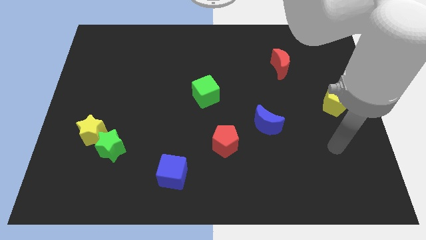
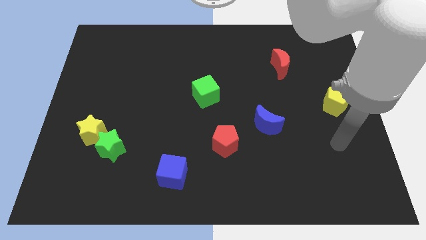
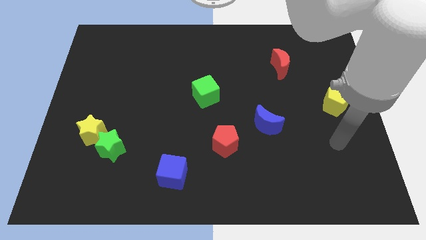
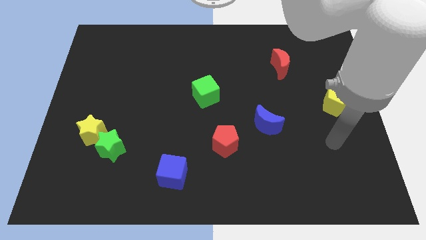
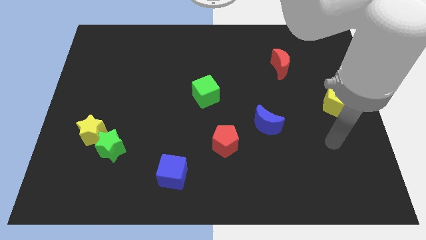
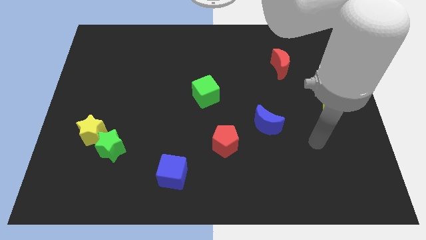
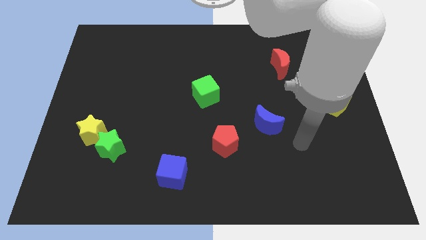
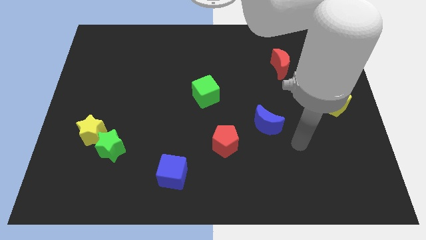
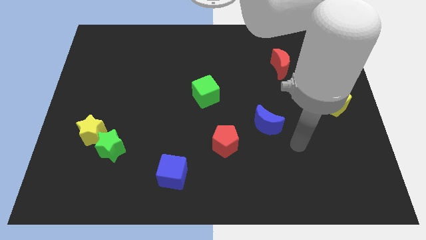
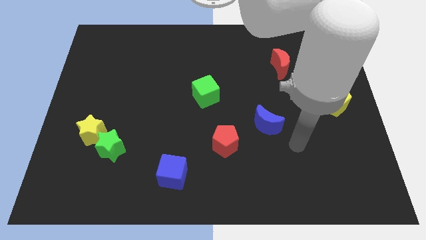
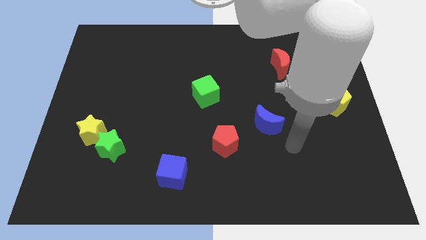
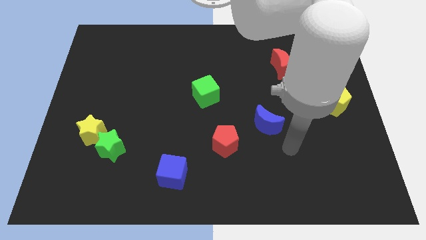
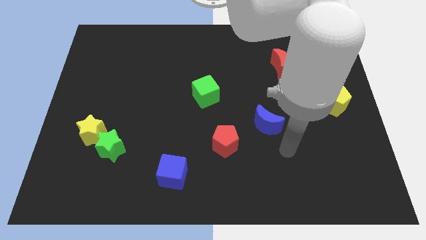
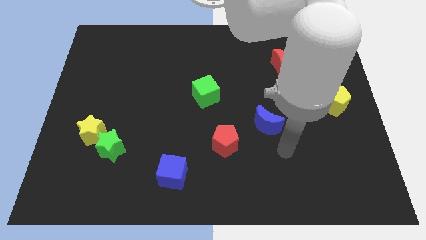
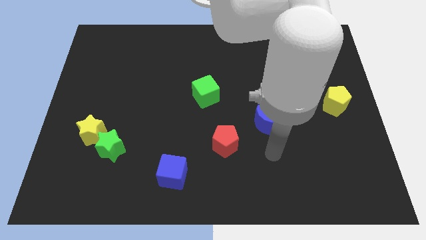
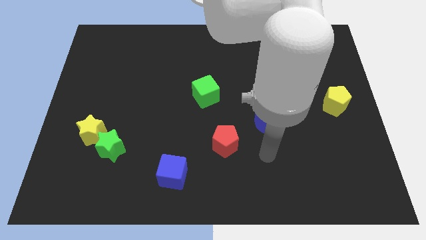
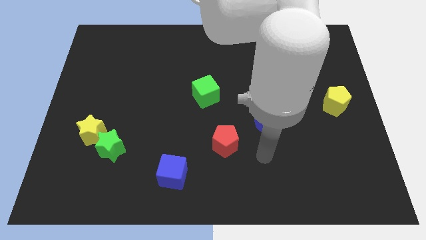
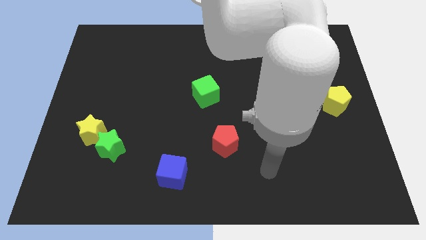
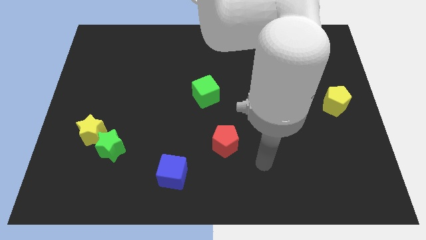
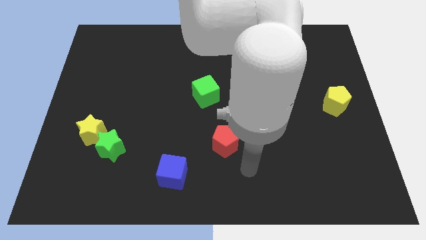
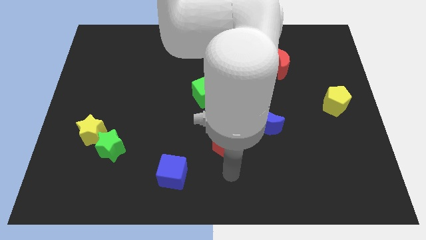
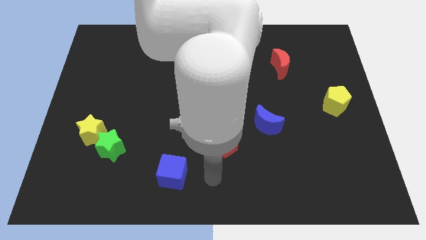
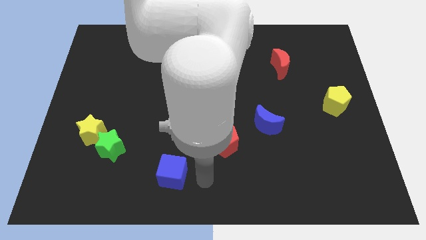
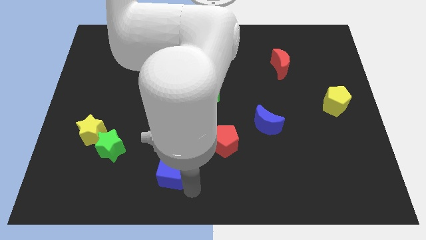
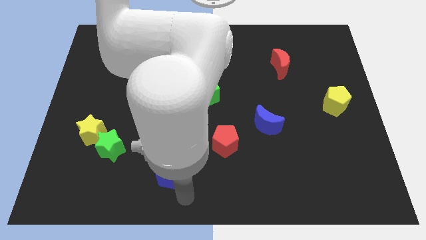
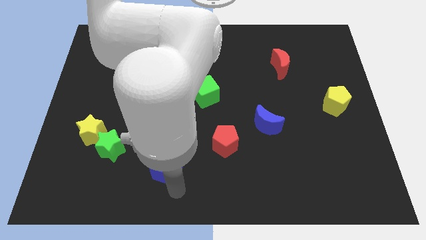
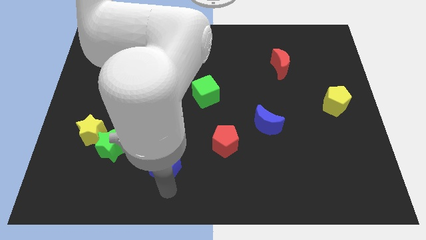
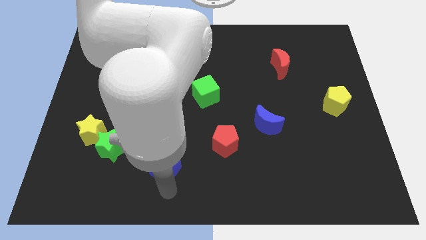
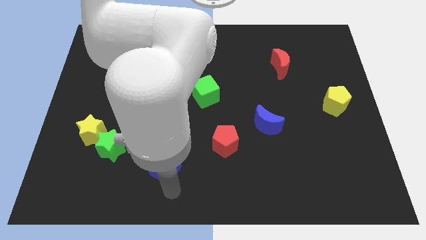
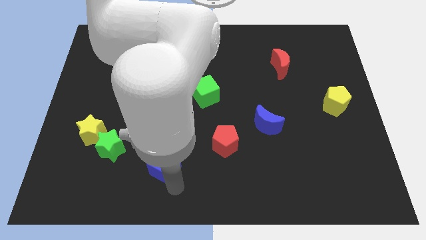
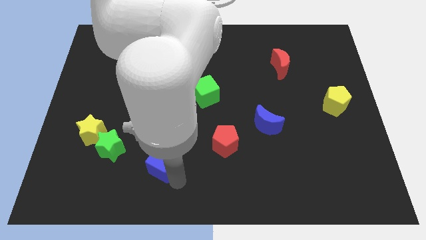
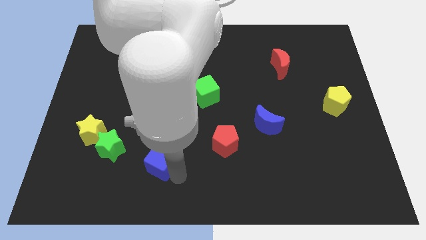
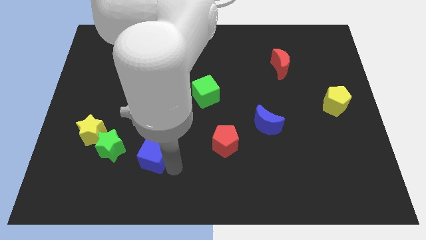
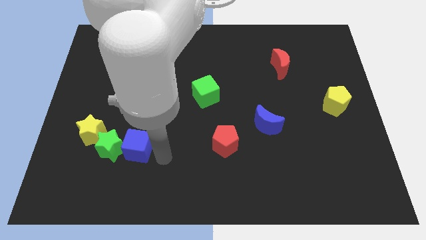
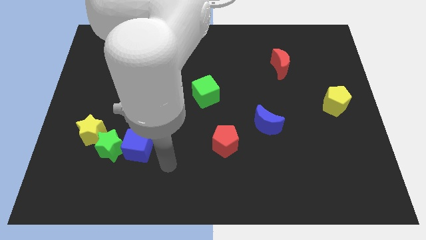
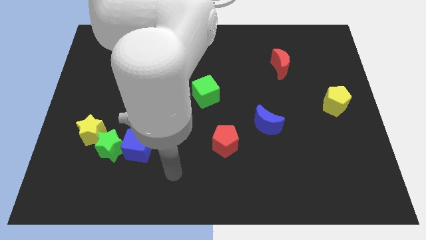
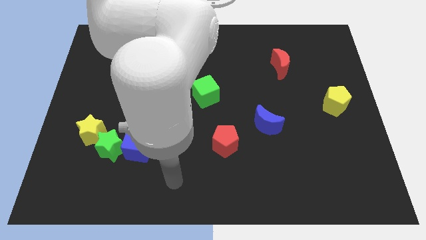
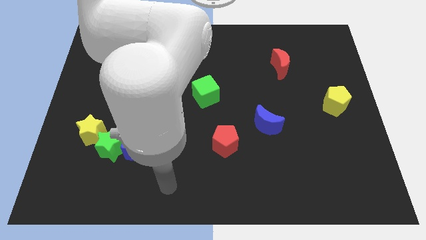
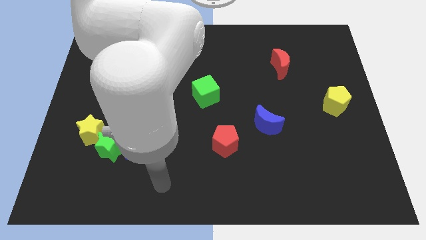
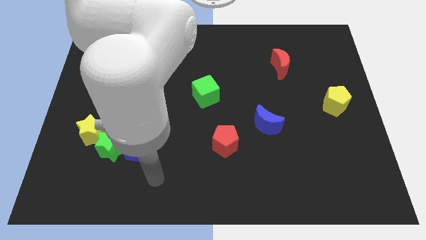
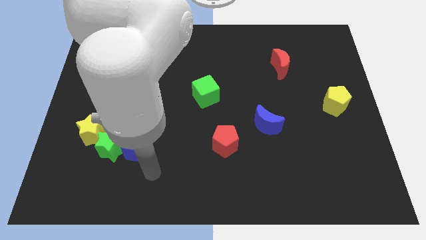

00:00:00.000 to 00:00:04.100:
push the blue cube into the green star

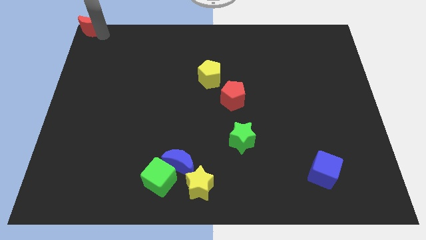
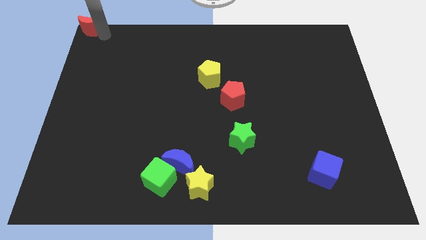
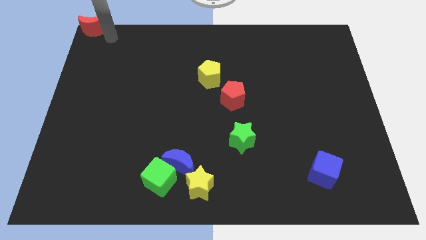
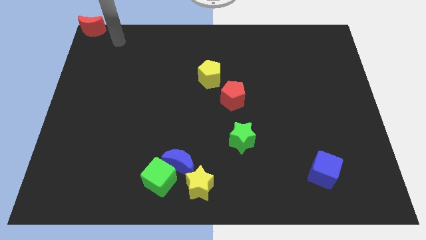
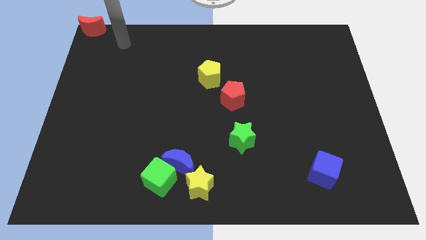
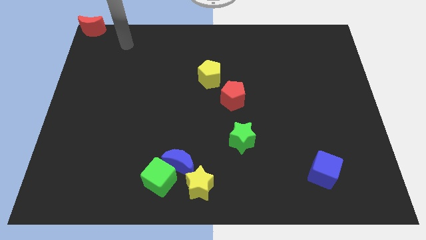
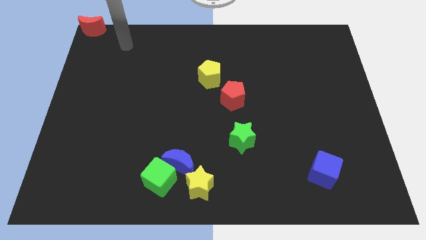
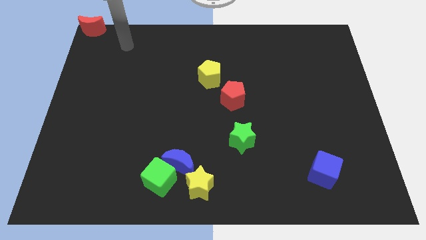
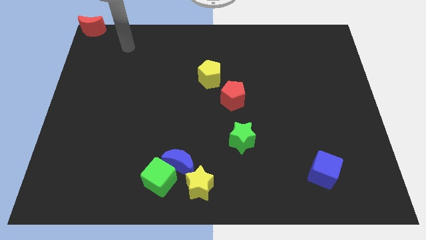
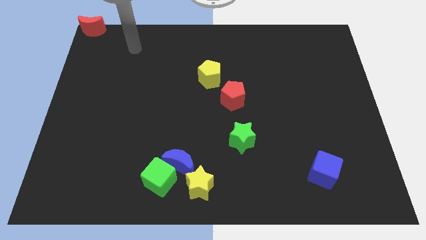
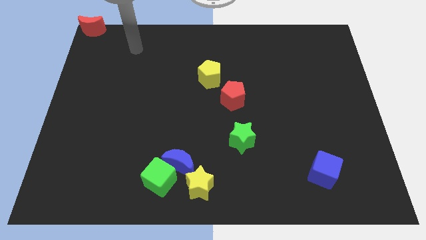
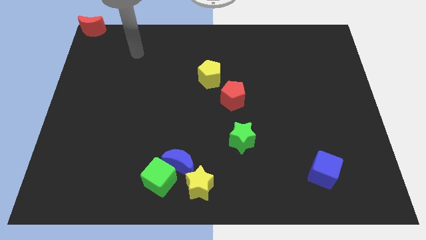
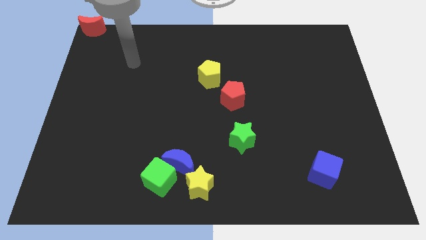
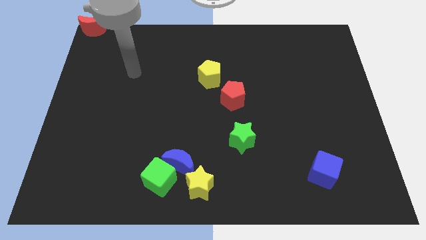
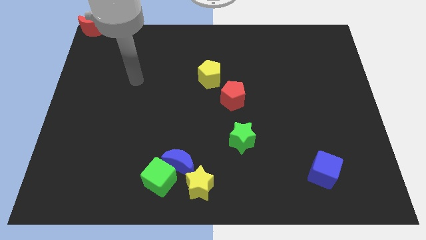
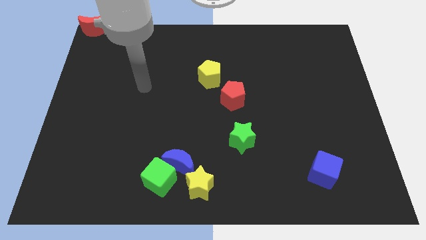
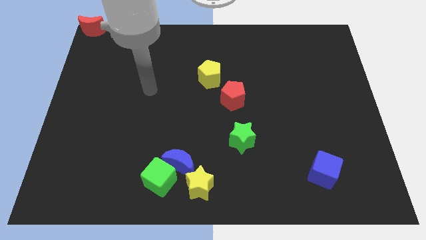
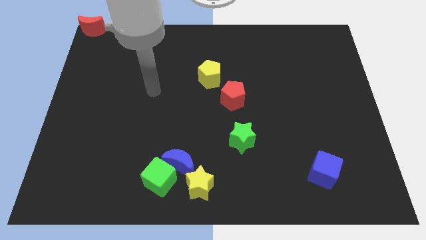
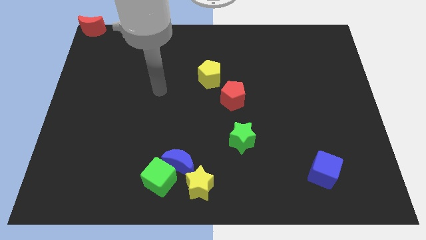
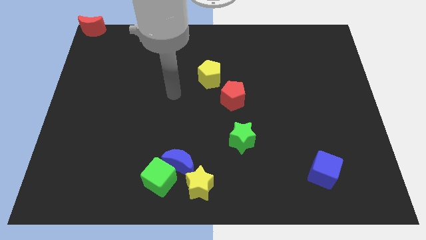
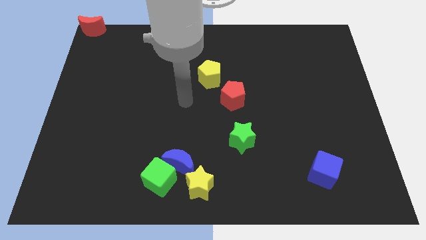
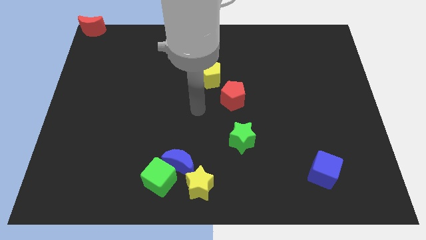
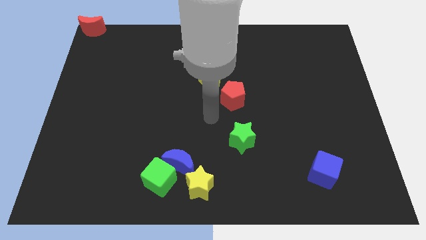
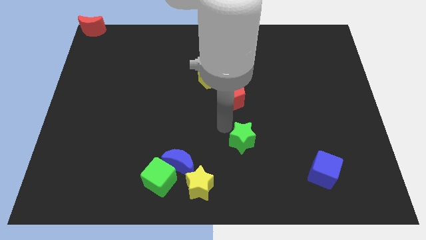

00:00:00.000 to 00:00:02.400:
move your arm away from the red moon

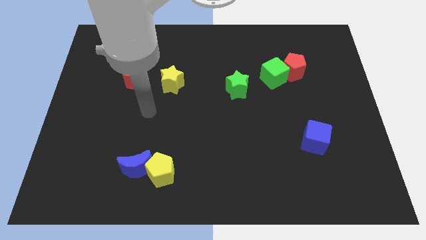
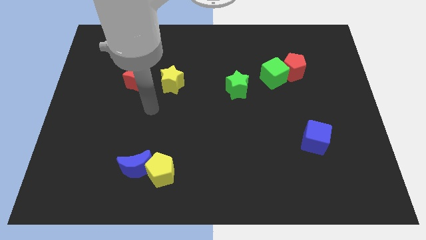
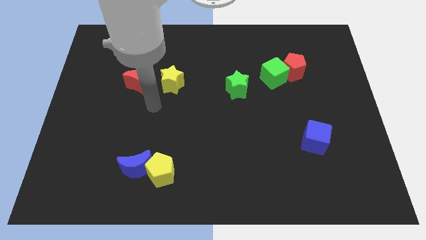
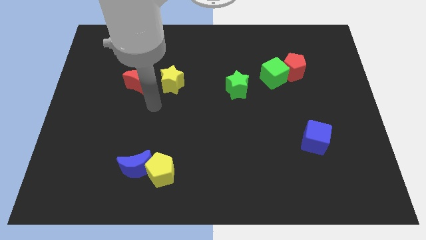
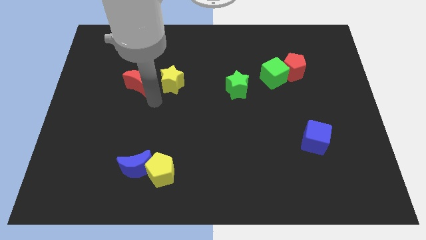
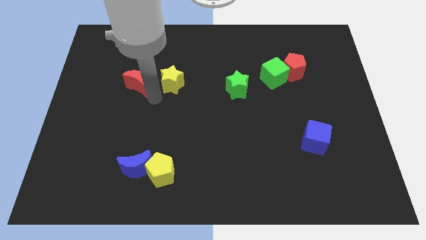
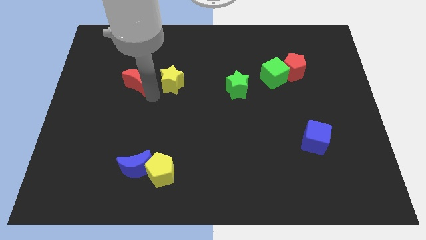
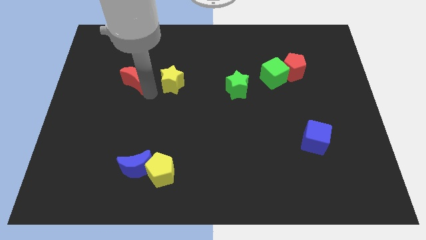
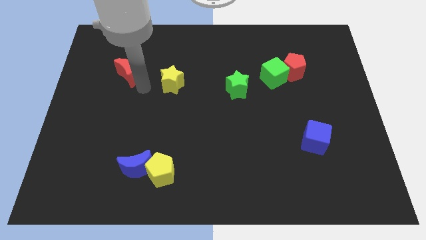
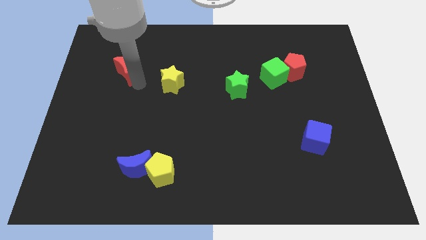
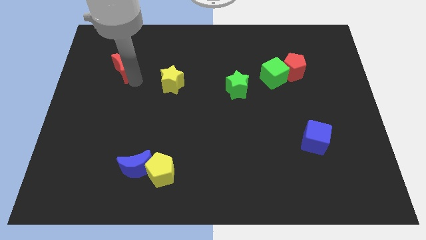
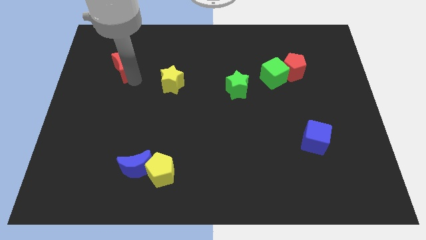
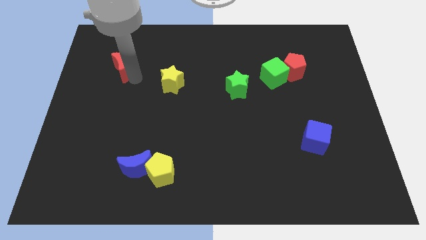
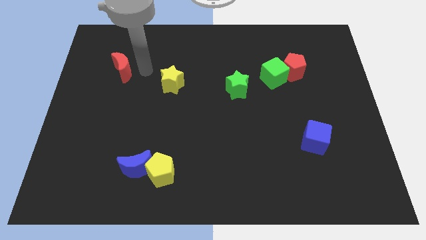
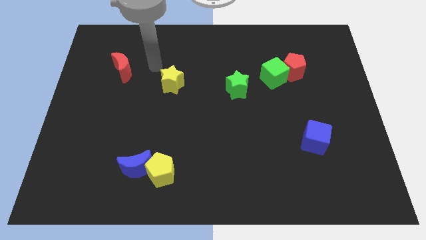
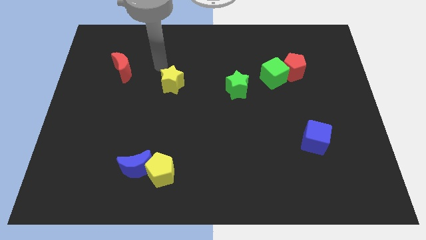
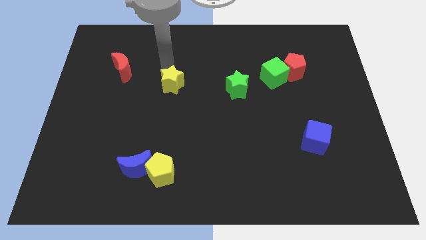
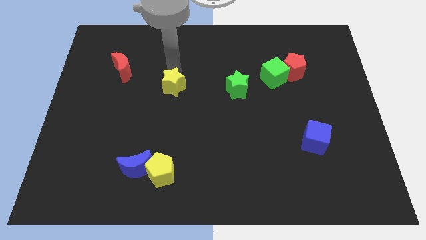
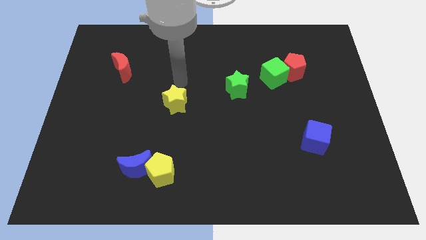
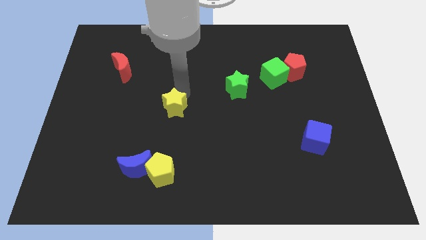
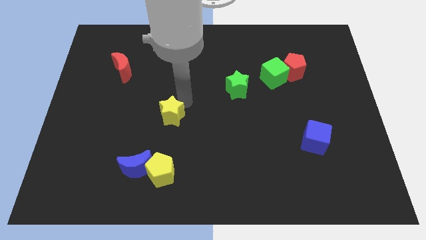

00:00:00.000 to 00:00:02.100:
slightly move the red pentagon of the board

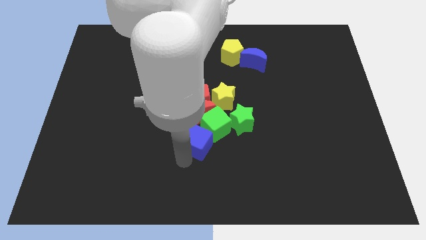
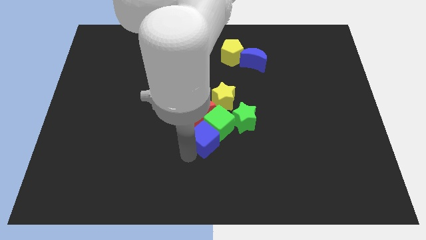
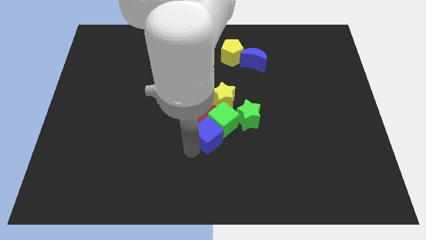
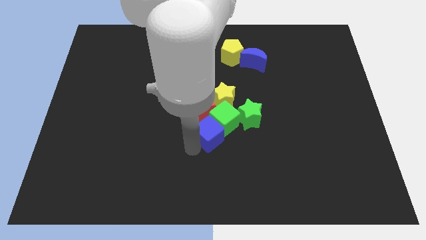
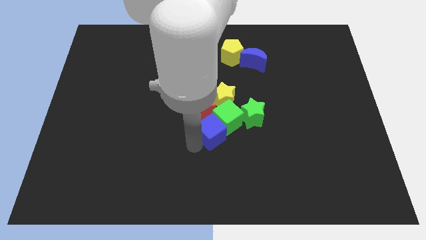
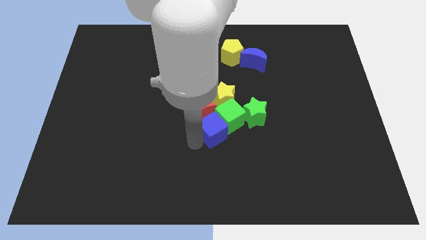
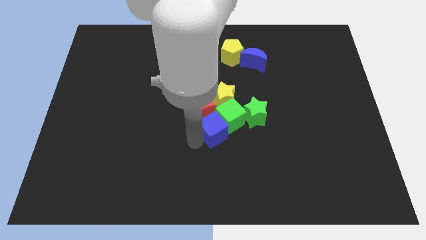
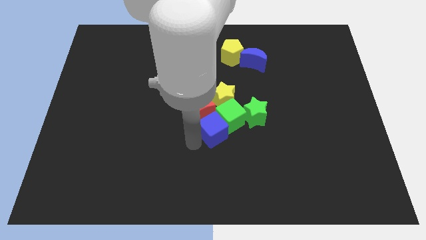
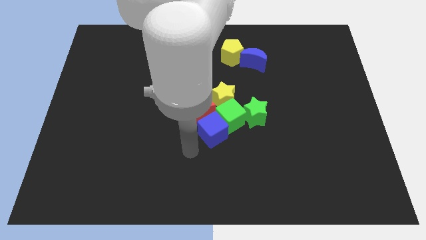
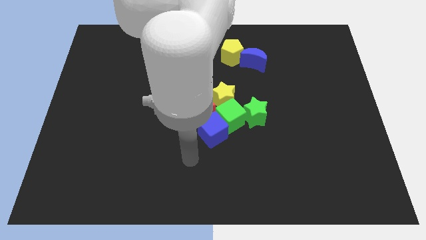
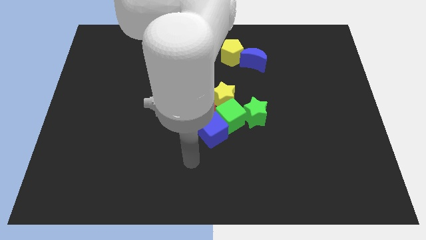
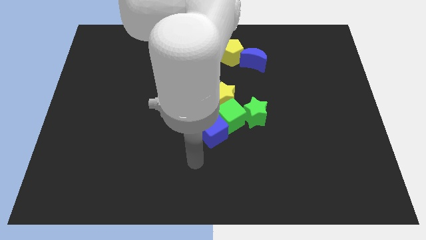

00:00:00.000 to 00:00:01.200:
move blue cube in green cube
